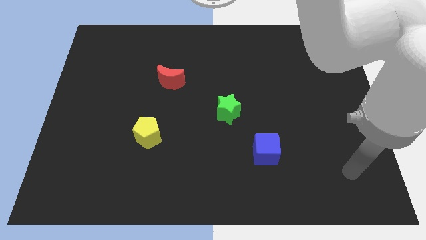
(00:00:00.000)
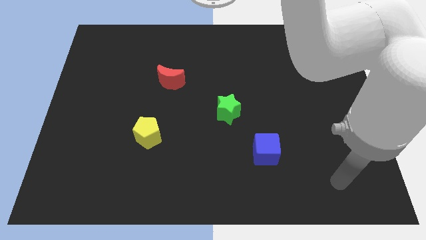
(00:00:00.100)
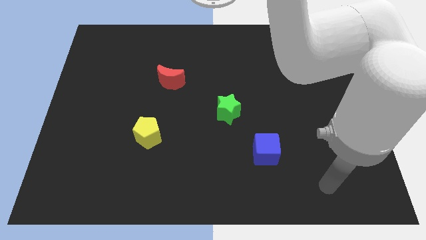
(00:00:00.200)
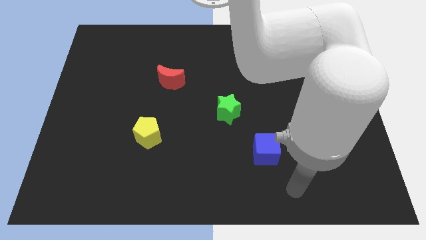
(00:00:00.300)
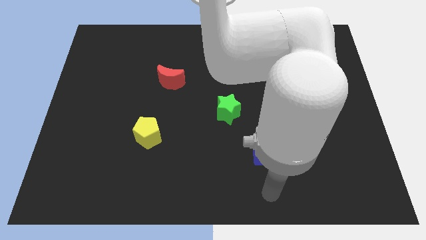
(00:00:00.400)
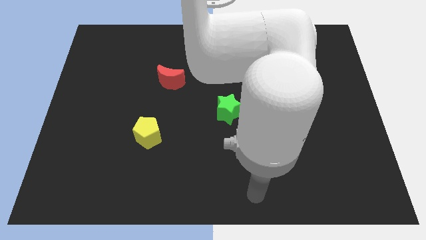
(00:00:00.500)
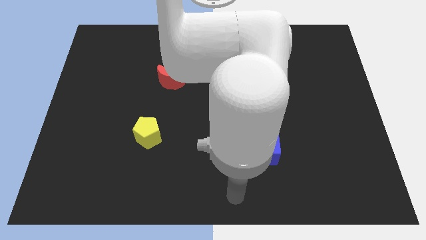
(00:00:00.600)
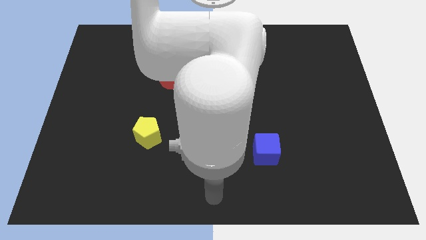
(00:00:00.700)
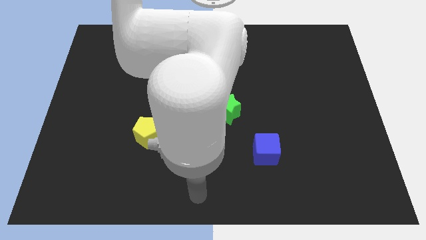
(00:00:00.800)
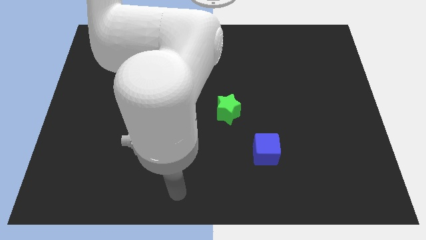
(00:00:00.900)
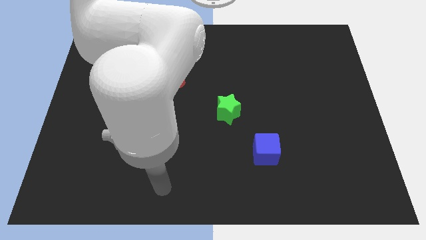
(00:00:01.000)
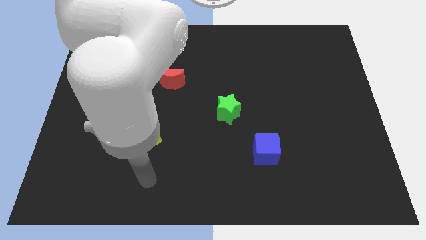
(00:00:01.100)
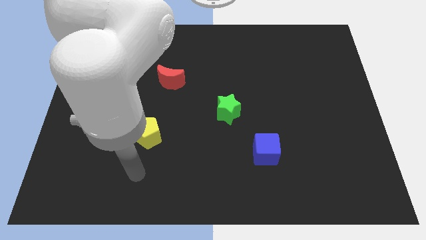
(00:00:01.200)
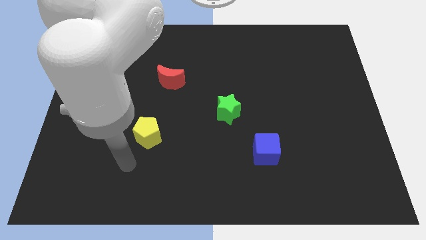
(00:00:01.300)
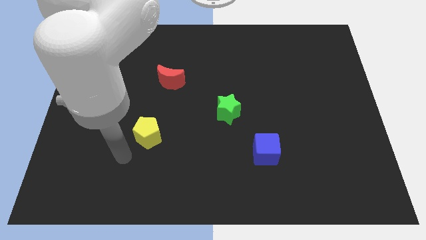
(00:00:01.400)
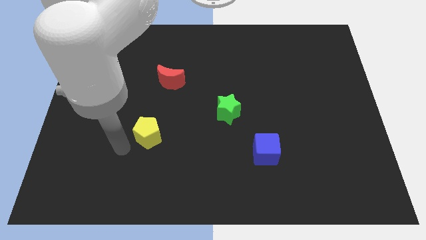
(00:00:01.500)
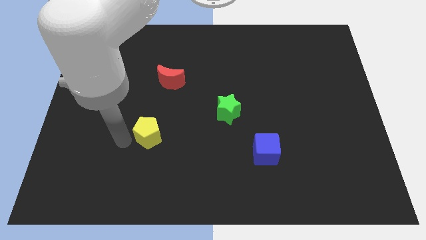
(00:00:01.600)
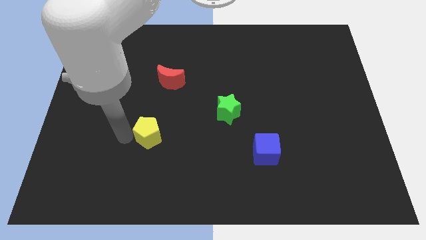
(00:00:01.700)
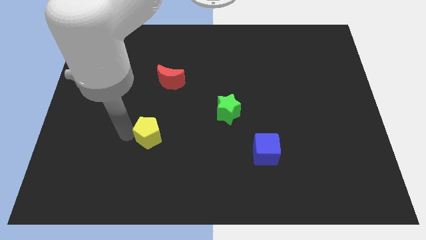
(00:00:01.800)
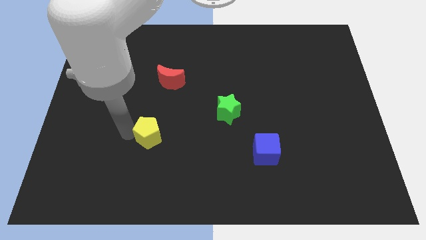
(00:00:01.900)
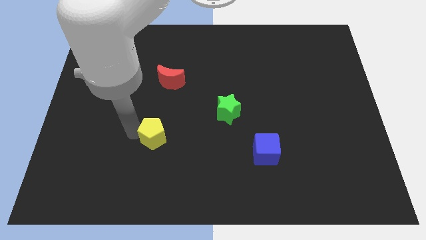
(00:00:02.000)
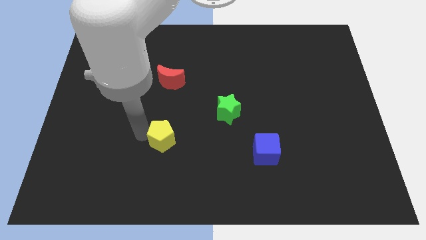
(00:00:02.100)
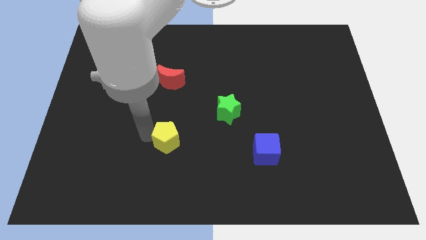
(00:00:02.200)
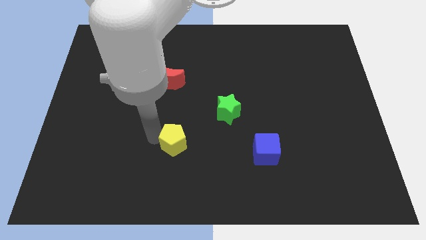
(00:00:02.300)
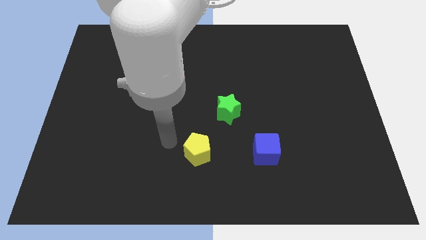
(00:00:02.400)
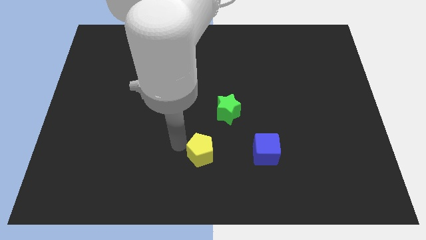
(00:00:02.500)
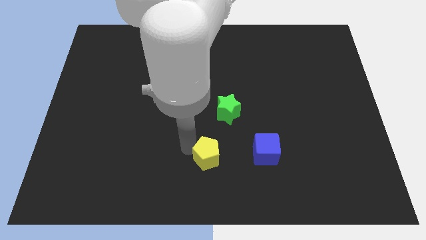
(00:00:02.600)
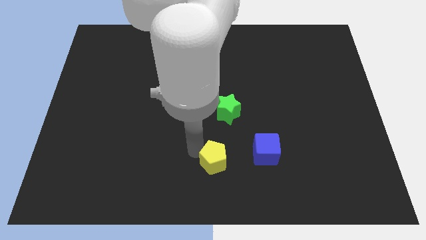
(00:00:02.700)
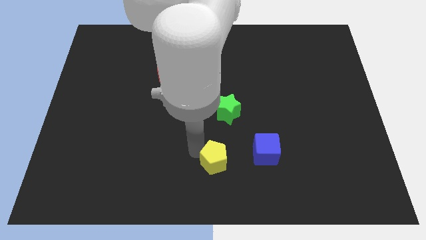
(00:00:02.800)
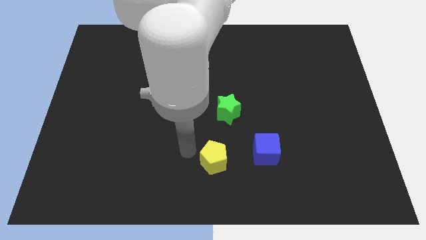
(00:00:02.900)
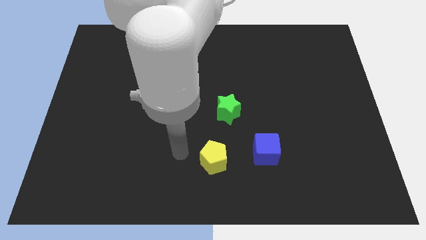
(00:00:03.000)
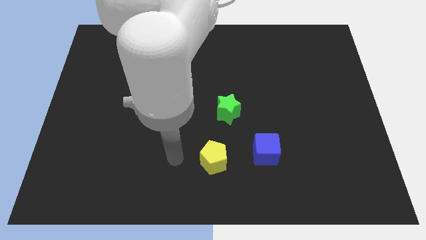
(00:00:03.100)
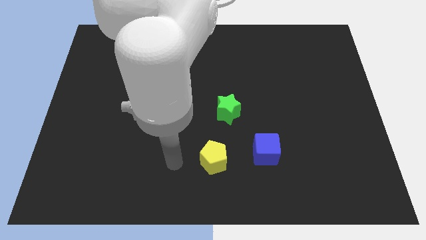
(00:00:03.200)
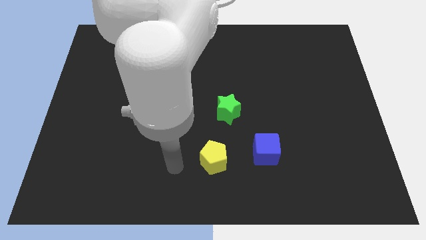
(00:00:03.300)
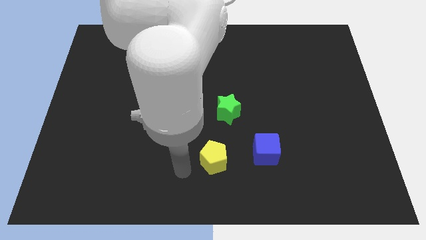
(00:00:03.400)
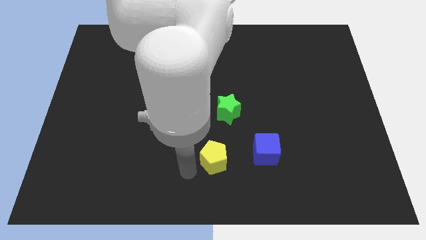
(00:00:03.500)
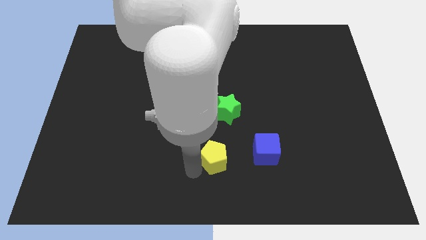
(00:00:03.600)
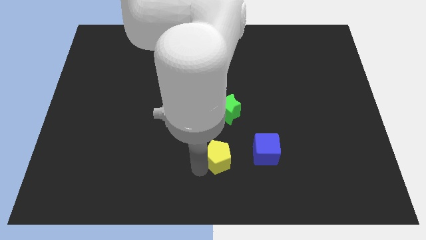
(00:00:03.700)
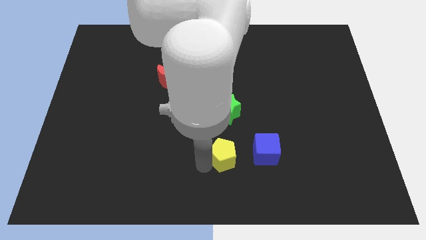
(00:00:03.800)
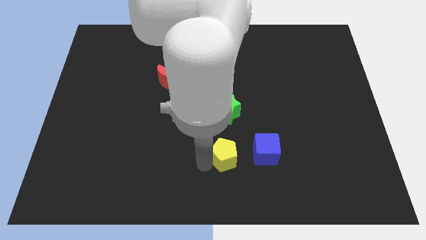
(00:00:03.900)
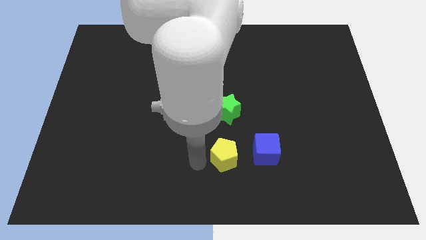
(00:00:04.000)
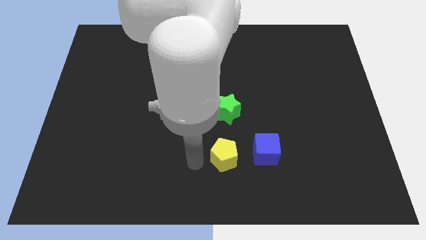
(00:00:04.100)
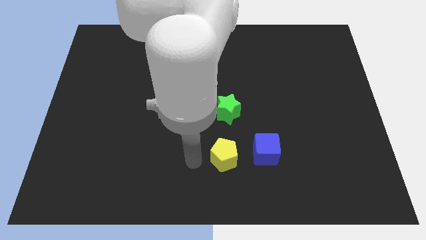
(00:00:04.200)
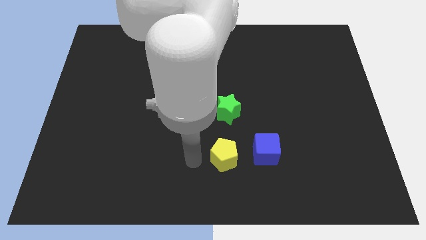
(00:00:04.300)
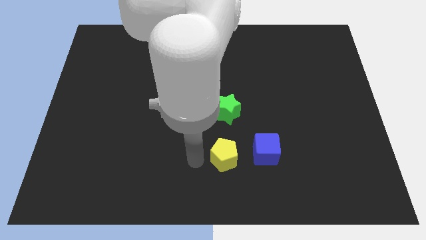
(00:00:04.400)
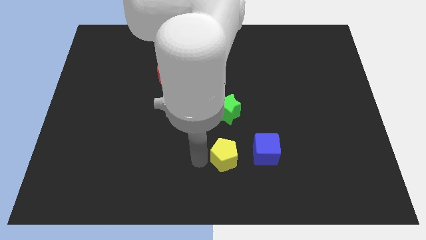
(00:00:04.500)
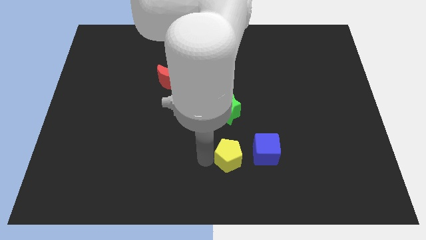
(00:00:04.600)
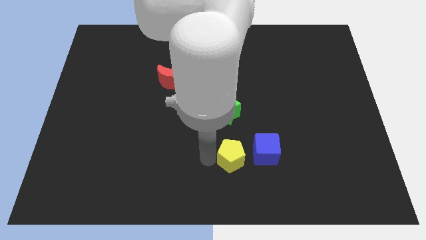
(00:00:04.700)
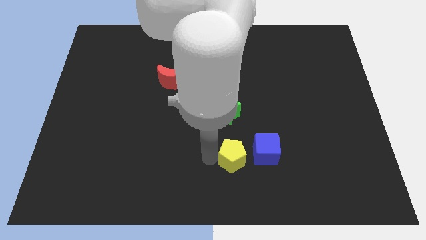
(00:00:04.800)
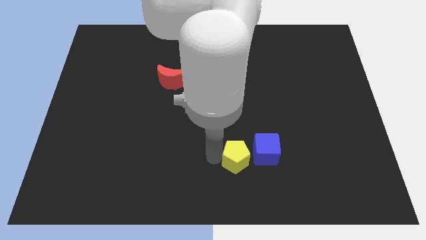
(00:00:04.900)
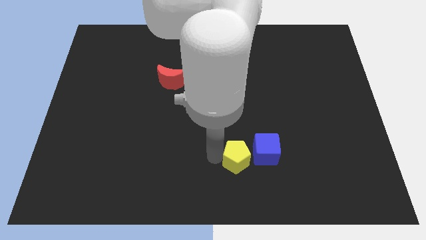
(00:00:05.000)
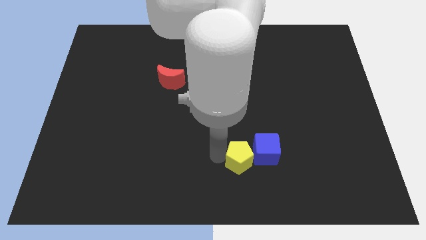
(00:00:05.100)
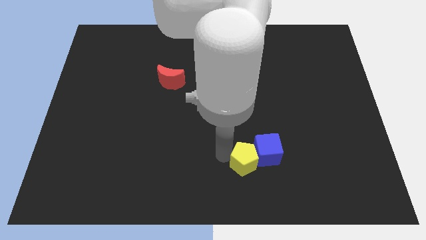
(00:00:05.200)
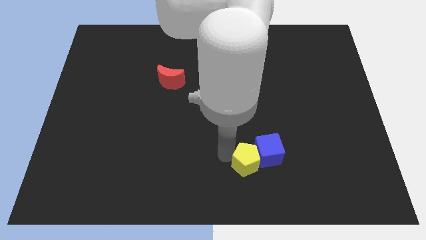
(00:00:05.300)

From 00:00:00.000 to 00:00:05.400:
slide the pentagon to the blue block

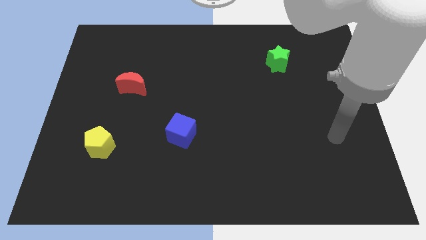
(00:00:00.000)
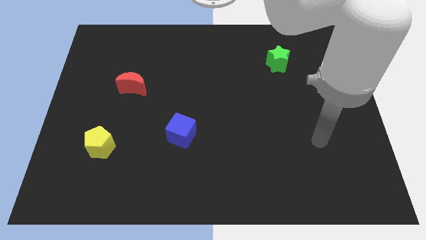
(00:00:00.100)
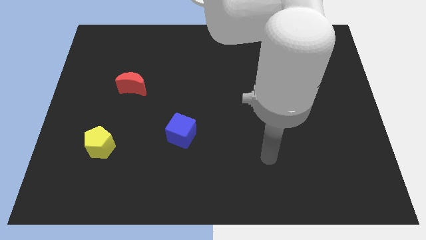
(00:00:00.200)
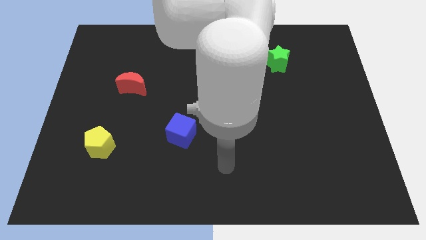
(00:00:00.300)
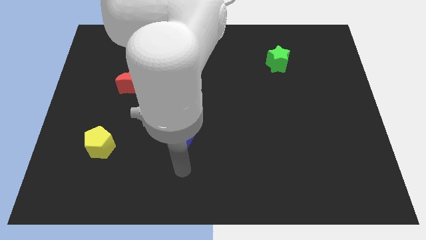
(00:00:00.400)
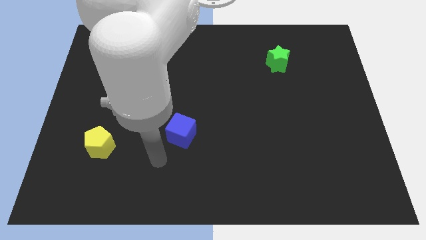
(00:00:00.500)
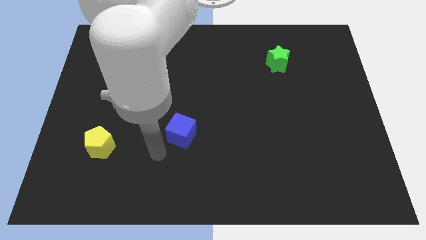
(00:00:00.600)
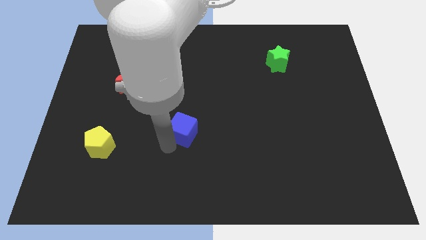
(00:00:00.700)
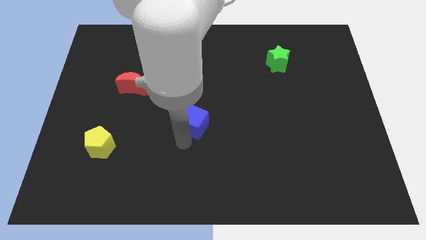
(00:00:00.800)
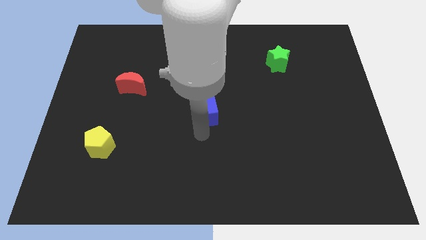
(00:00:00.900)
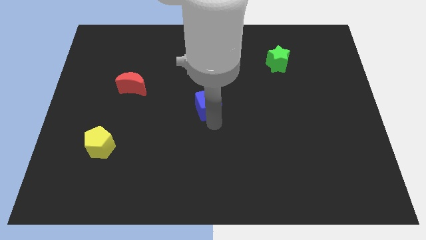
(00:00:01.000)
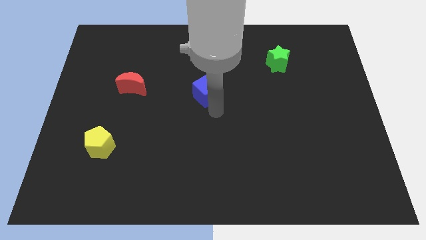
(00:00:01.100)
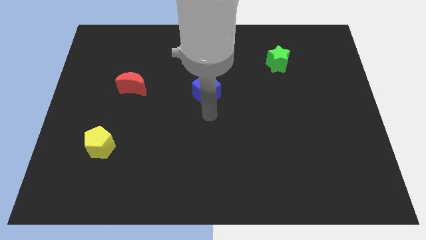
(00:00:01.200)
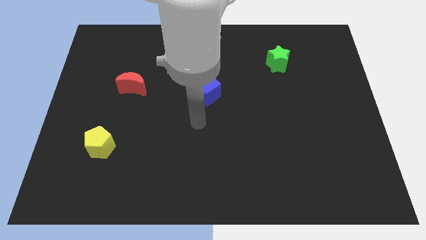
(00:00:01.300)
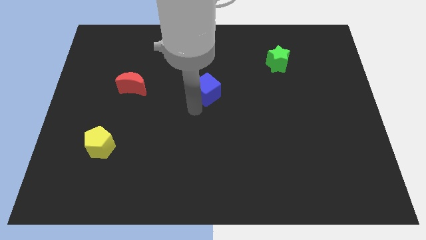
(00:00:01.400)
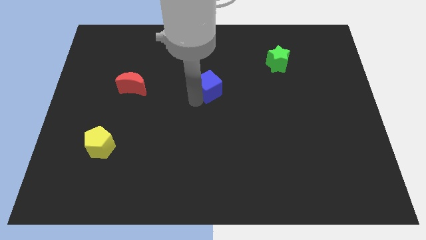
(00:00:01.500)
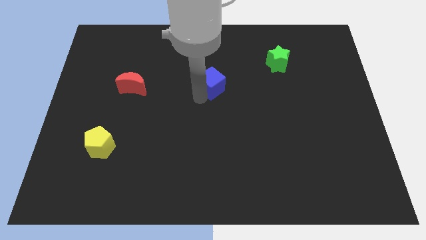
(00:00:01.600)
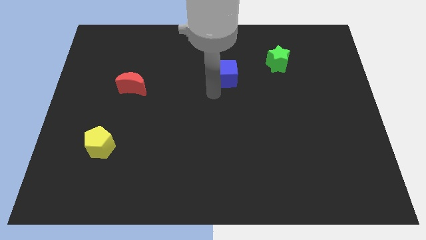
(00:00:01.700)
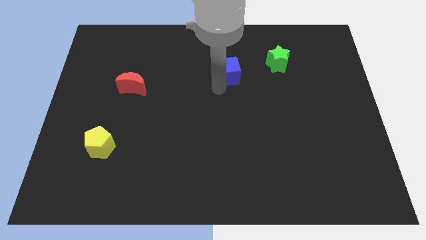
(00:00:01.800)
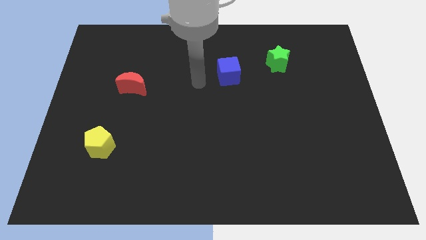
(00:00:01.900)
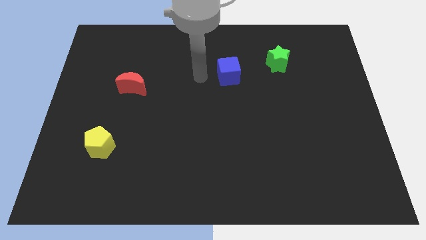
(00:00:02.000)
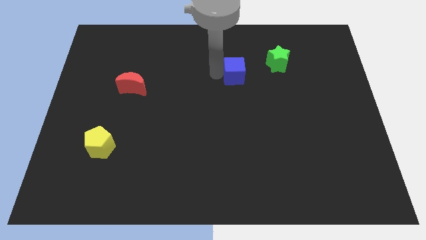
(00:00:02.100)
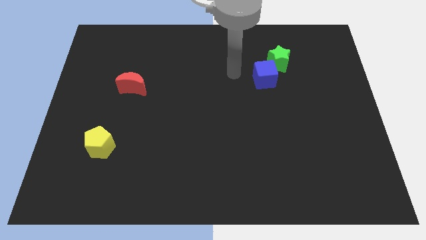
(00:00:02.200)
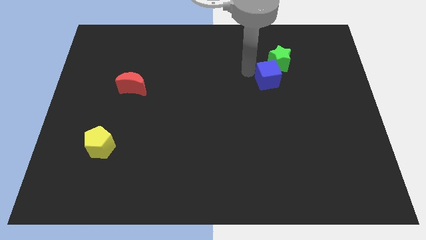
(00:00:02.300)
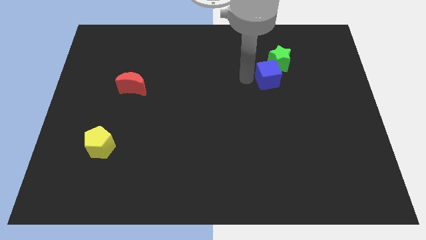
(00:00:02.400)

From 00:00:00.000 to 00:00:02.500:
push the blue cube to the star

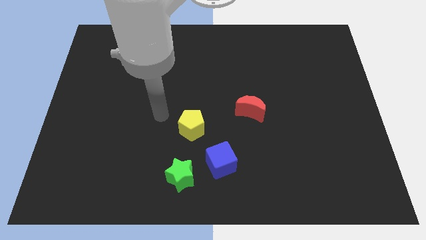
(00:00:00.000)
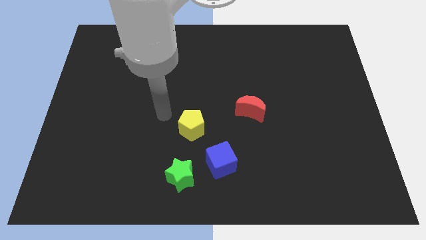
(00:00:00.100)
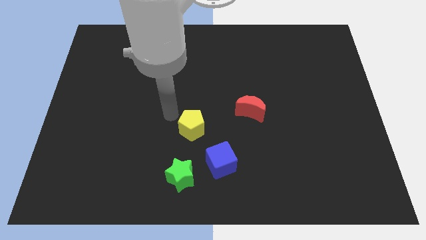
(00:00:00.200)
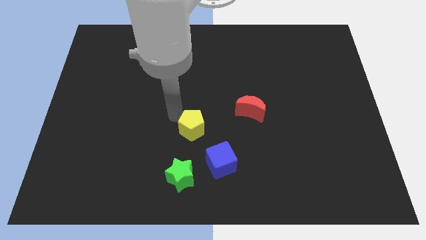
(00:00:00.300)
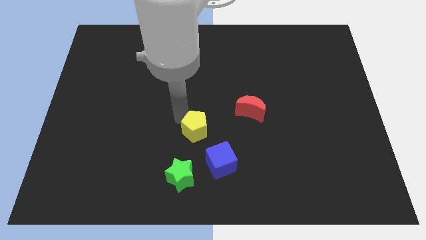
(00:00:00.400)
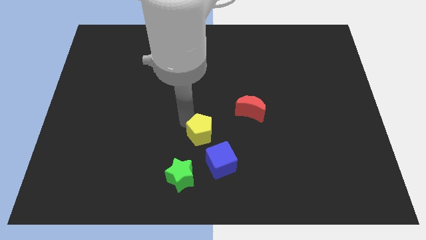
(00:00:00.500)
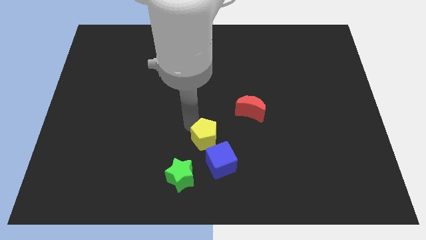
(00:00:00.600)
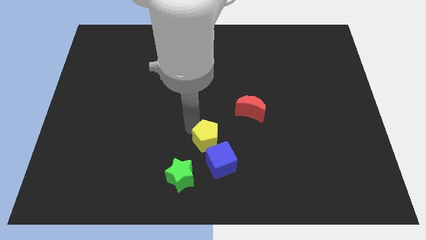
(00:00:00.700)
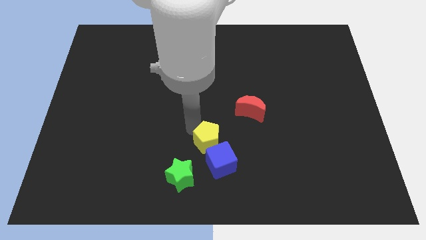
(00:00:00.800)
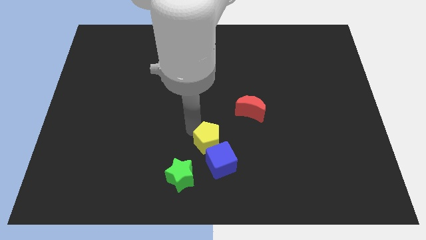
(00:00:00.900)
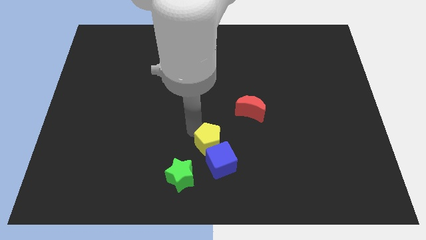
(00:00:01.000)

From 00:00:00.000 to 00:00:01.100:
push the yellow block to the cube
